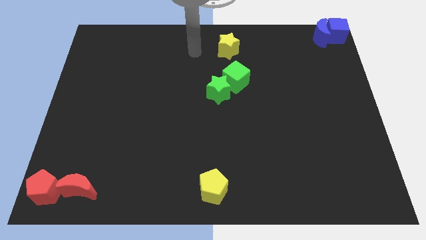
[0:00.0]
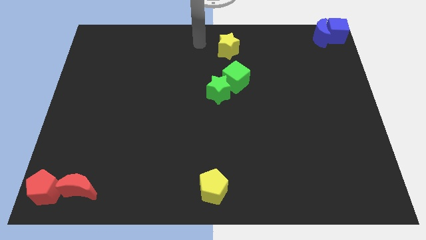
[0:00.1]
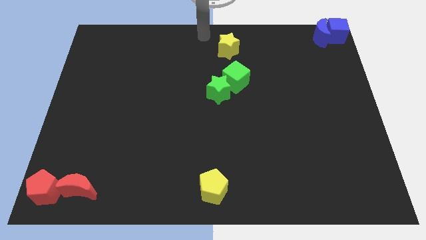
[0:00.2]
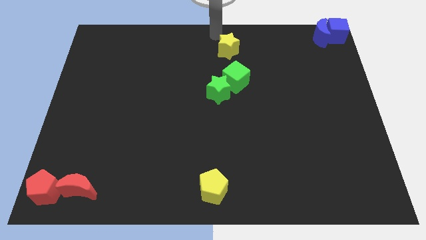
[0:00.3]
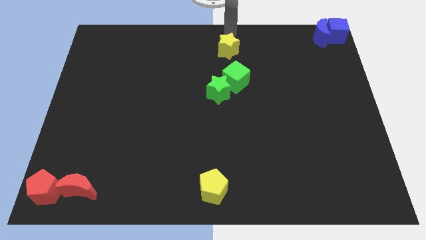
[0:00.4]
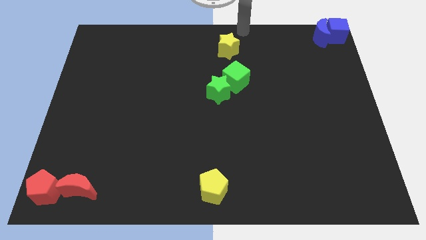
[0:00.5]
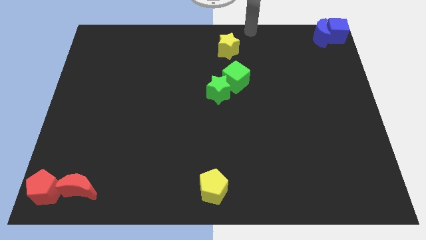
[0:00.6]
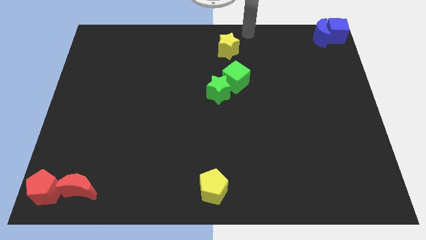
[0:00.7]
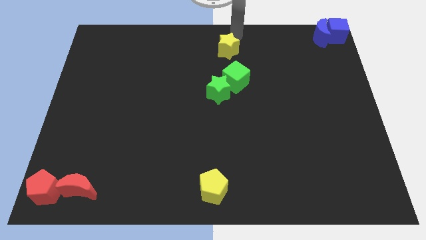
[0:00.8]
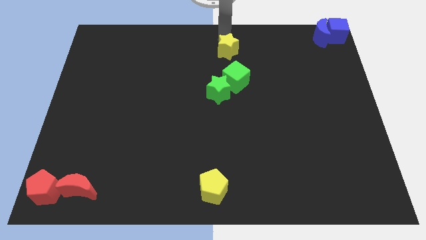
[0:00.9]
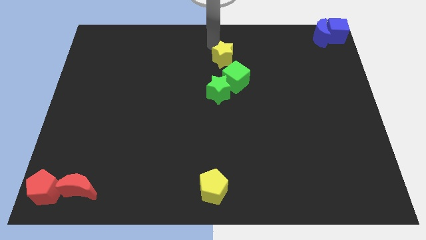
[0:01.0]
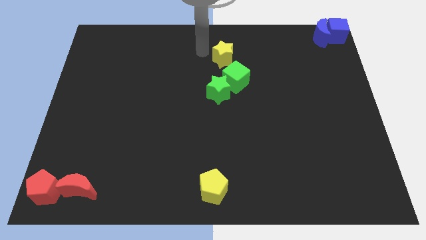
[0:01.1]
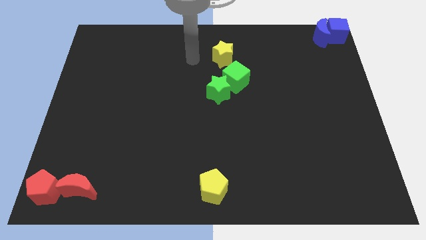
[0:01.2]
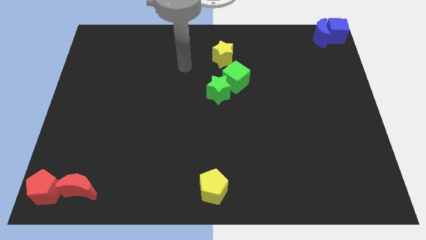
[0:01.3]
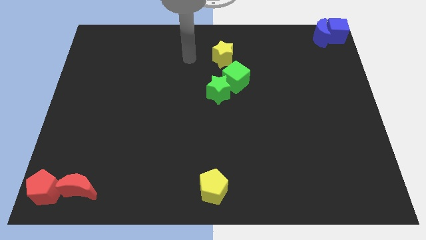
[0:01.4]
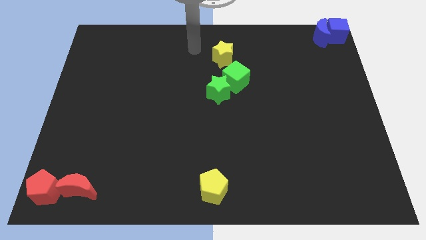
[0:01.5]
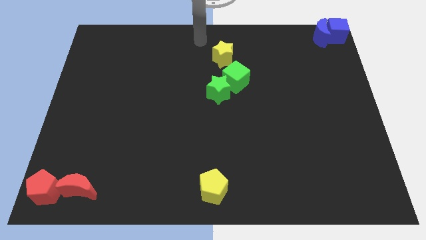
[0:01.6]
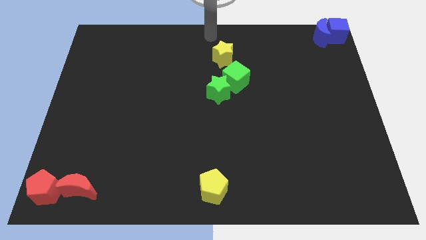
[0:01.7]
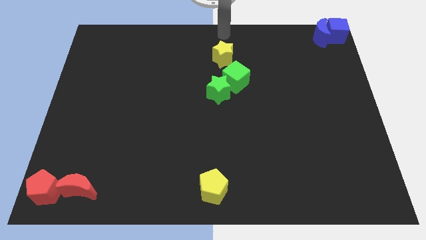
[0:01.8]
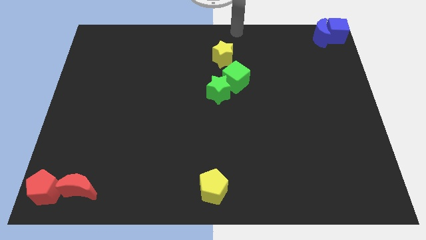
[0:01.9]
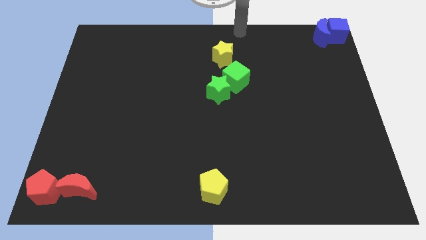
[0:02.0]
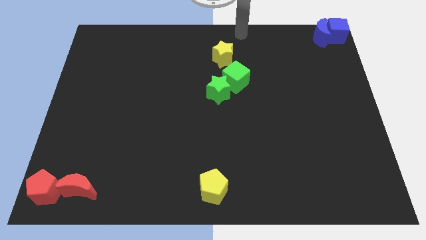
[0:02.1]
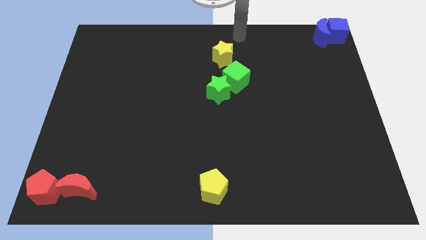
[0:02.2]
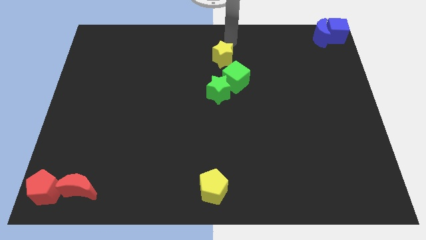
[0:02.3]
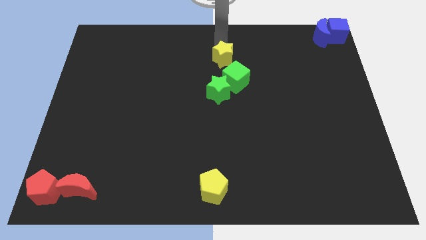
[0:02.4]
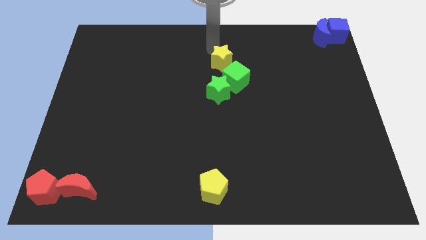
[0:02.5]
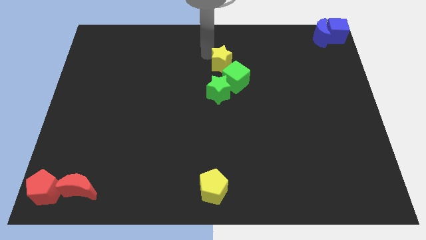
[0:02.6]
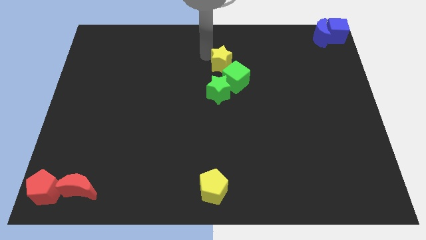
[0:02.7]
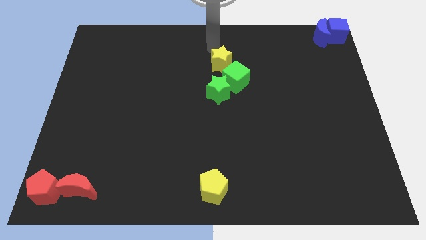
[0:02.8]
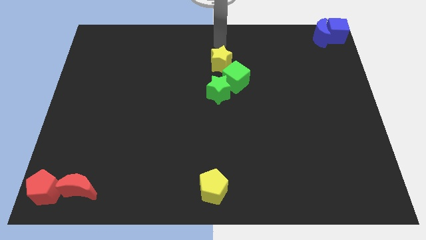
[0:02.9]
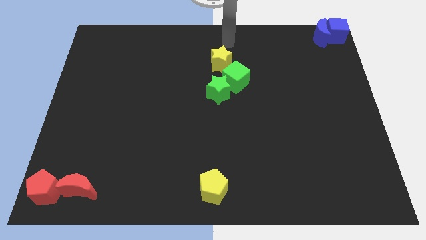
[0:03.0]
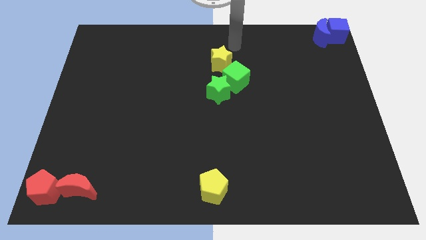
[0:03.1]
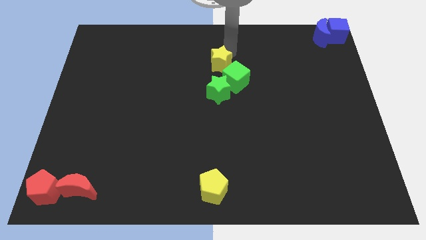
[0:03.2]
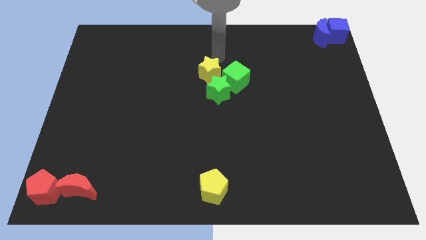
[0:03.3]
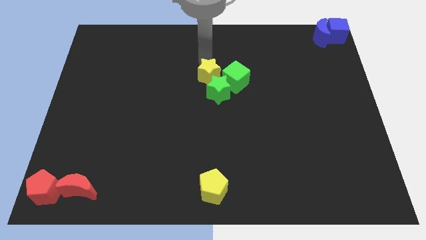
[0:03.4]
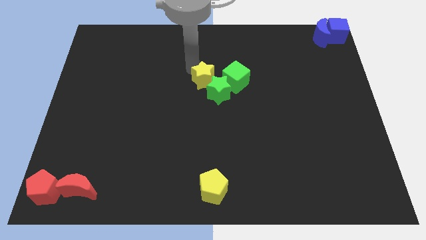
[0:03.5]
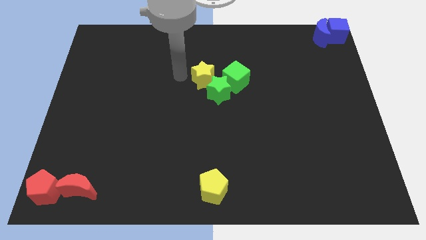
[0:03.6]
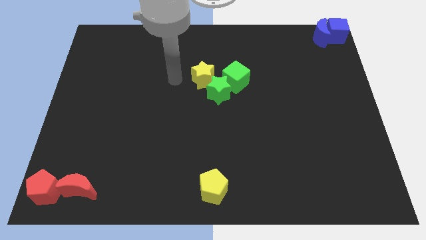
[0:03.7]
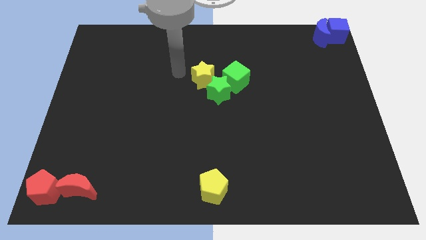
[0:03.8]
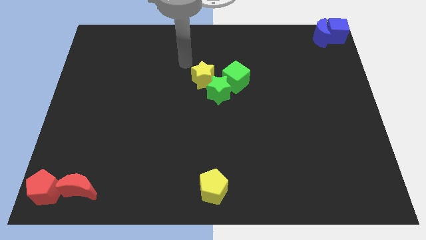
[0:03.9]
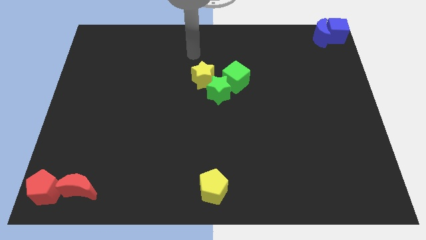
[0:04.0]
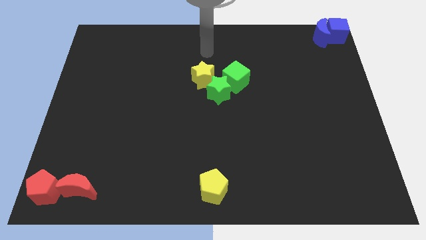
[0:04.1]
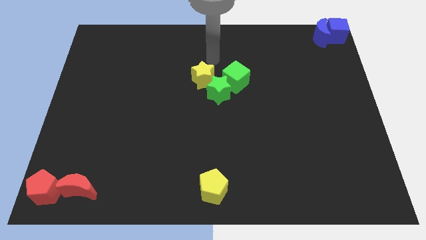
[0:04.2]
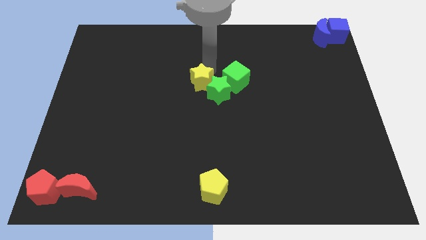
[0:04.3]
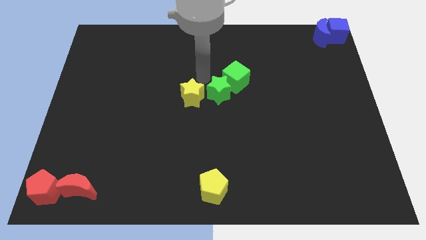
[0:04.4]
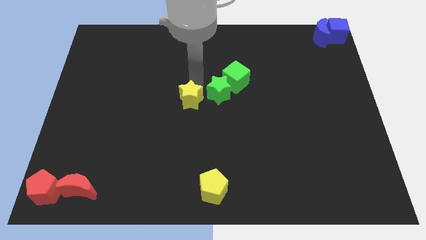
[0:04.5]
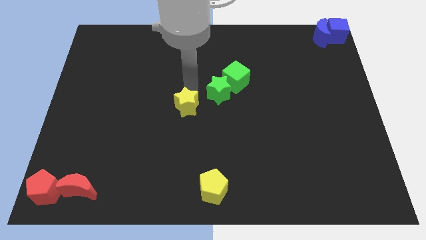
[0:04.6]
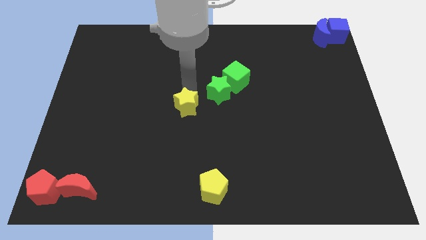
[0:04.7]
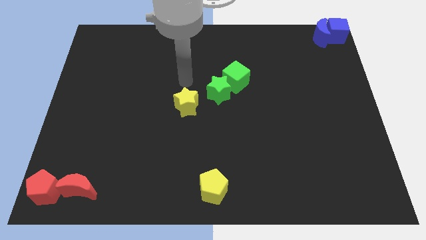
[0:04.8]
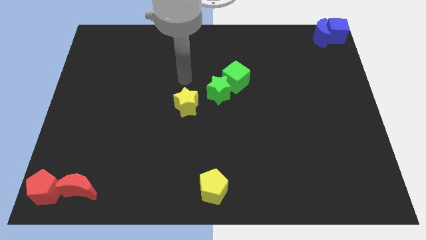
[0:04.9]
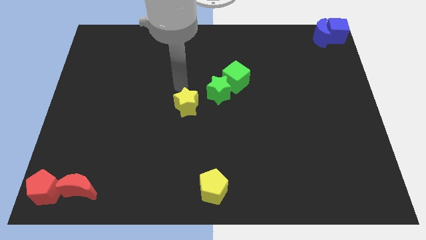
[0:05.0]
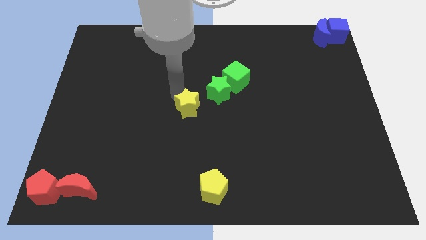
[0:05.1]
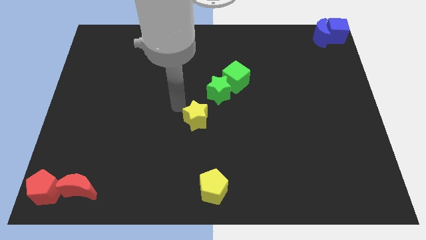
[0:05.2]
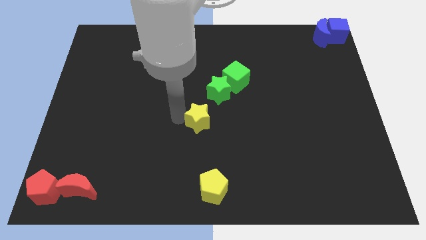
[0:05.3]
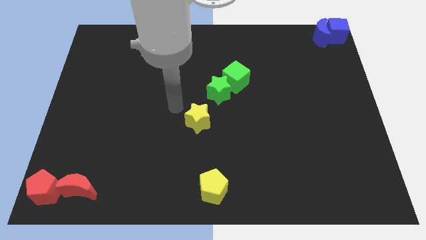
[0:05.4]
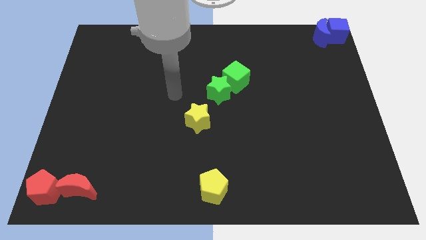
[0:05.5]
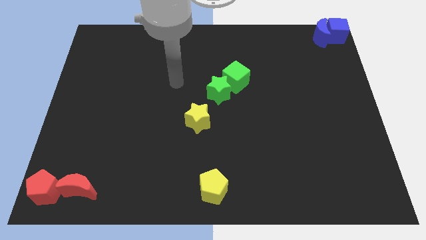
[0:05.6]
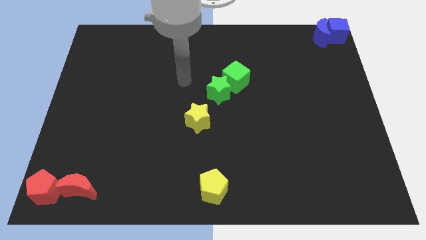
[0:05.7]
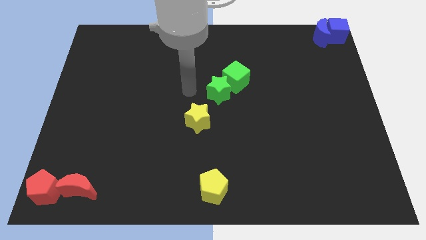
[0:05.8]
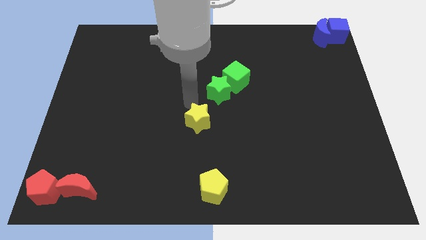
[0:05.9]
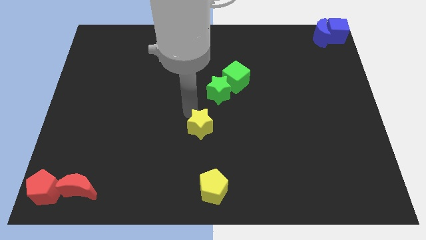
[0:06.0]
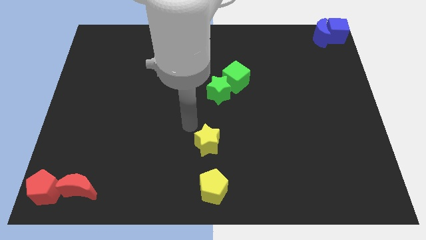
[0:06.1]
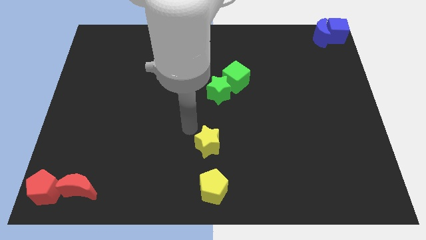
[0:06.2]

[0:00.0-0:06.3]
push yellow star downwards

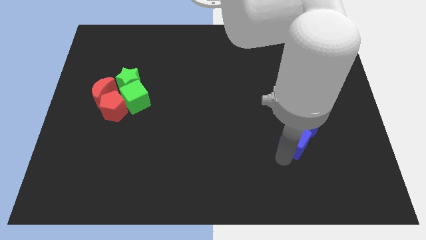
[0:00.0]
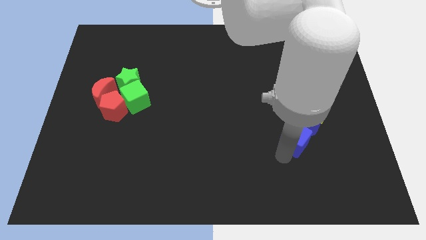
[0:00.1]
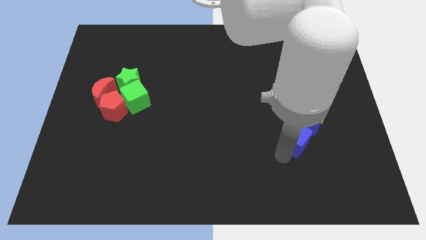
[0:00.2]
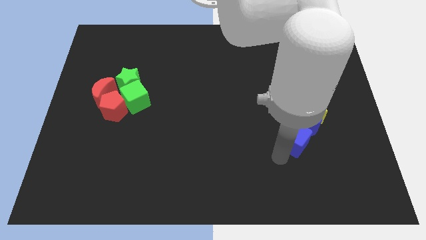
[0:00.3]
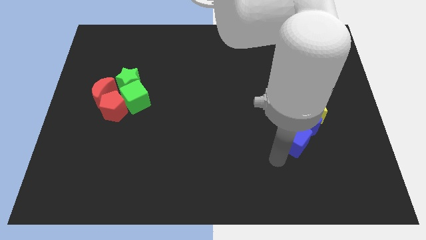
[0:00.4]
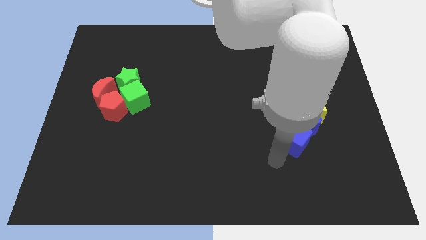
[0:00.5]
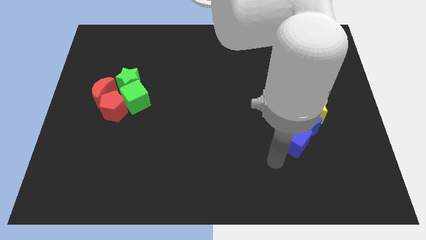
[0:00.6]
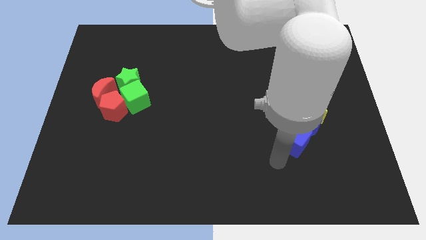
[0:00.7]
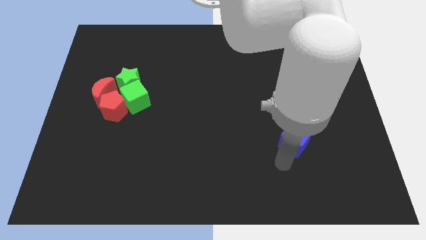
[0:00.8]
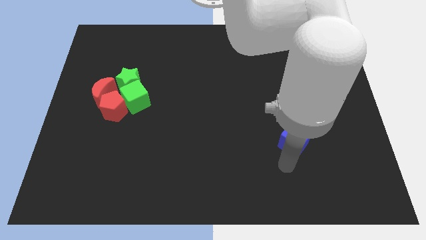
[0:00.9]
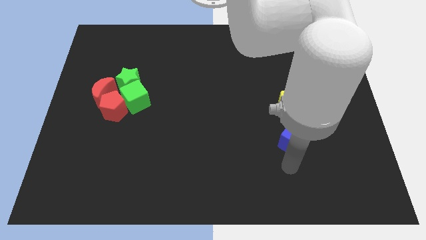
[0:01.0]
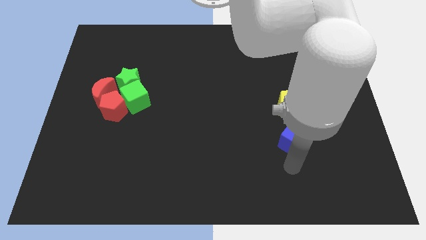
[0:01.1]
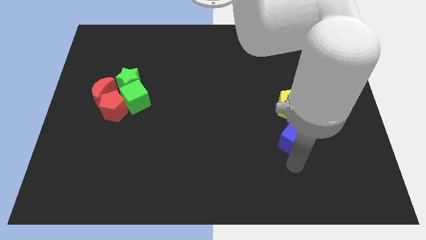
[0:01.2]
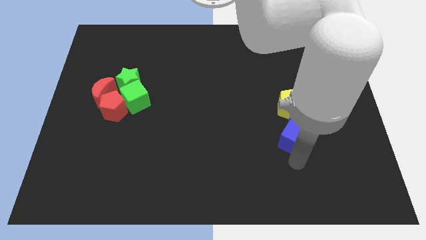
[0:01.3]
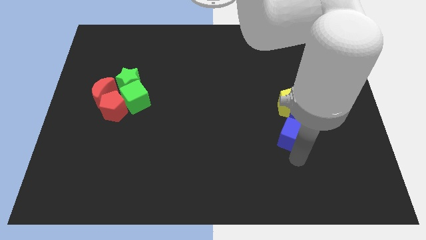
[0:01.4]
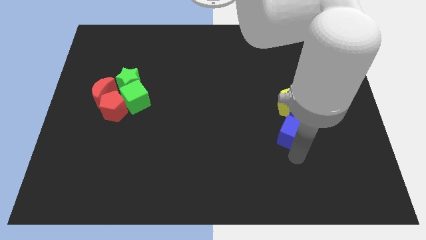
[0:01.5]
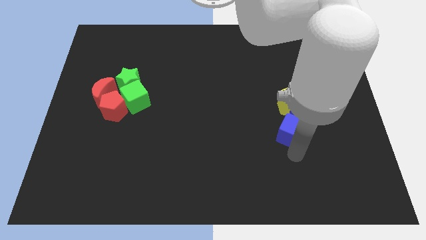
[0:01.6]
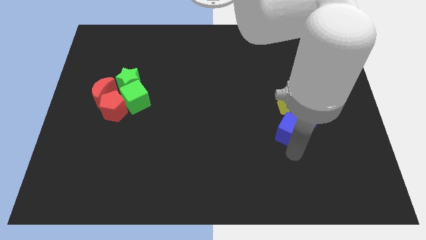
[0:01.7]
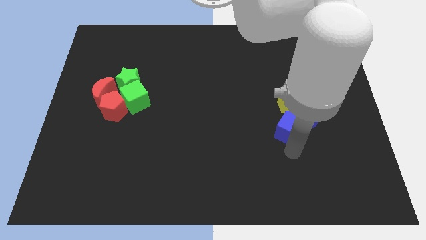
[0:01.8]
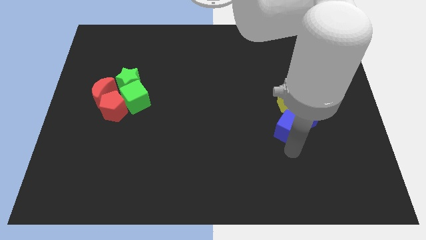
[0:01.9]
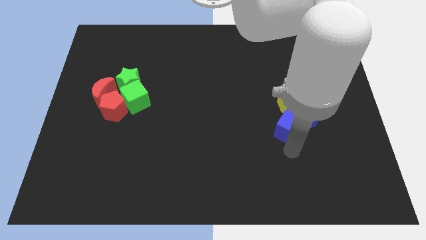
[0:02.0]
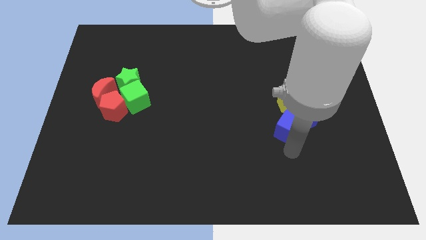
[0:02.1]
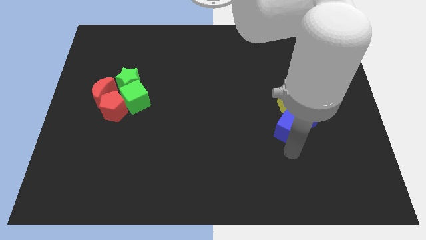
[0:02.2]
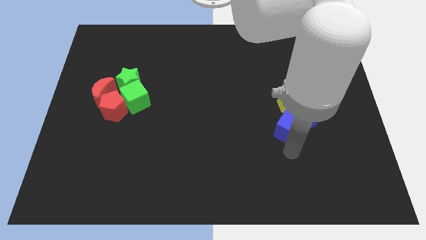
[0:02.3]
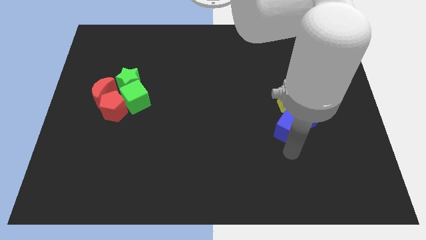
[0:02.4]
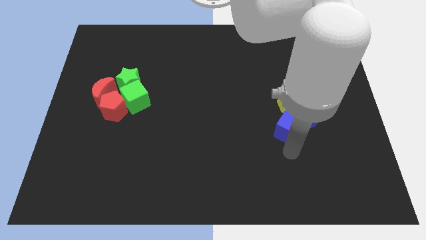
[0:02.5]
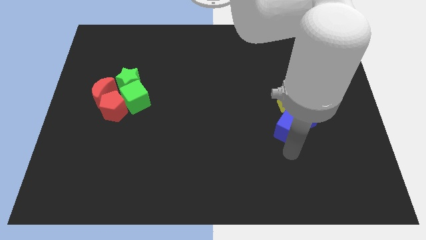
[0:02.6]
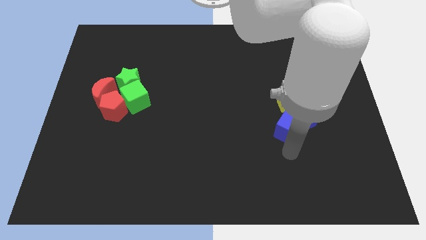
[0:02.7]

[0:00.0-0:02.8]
move blue cube into blue moon
